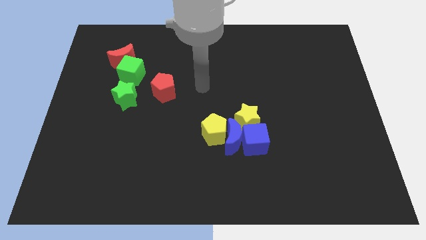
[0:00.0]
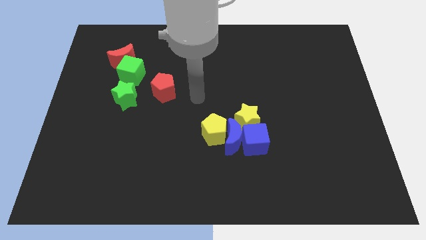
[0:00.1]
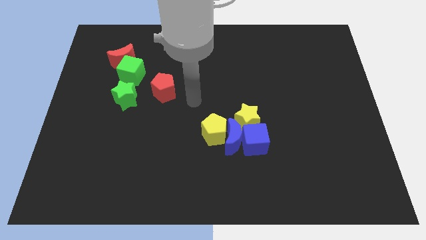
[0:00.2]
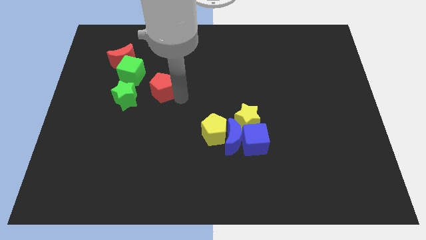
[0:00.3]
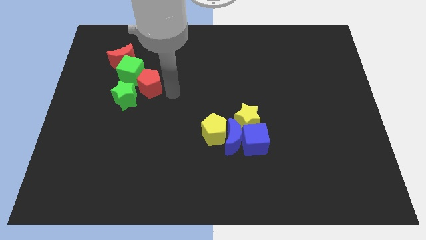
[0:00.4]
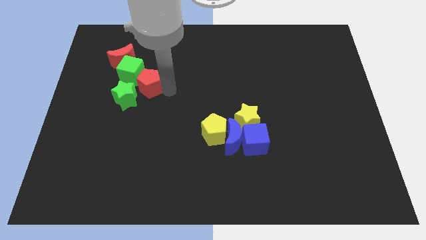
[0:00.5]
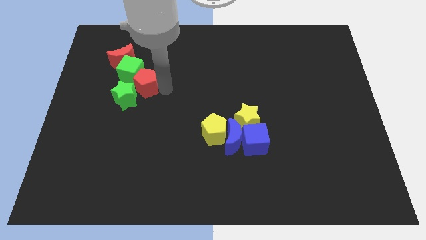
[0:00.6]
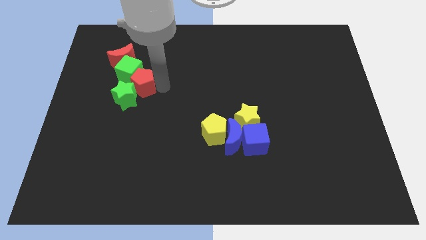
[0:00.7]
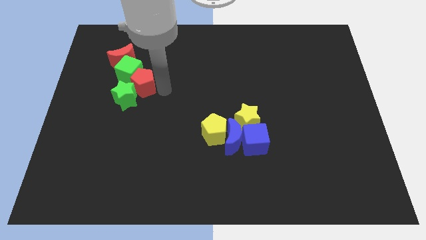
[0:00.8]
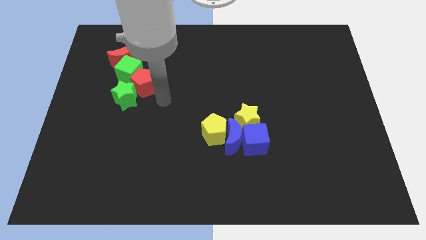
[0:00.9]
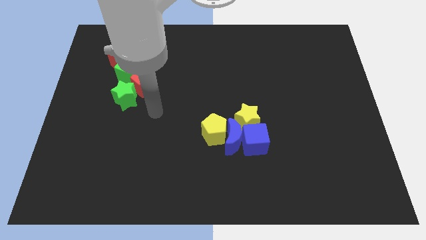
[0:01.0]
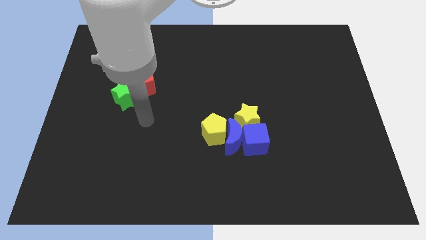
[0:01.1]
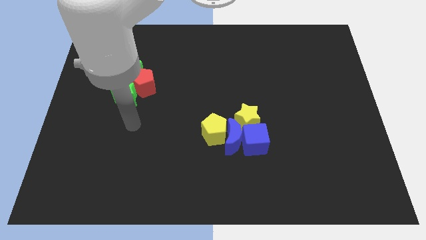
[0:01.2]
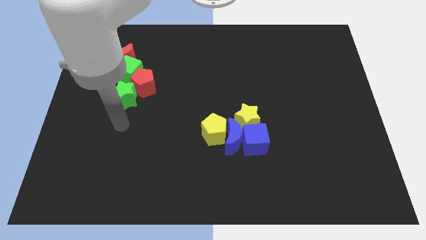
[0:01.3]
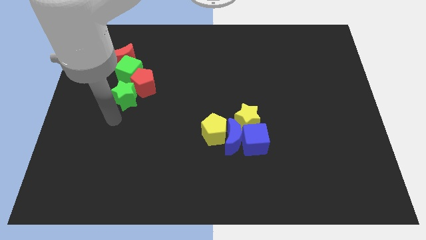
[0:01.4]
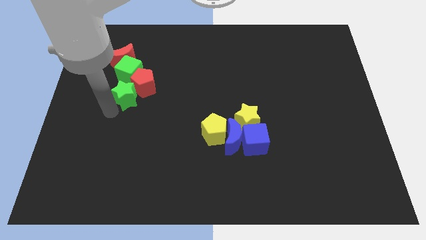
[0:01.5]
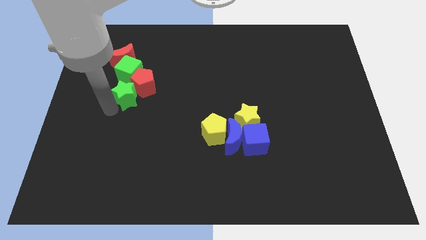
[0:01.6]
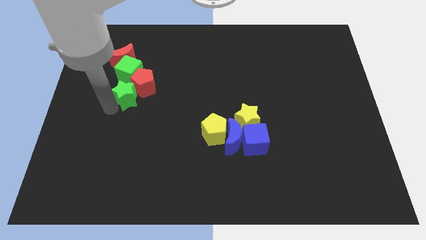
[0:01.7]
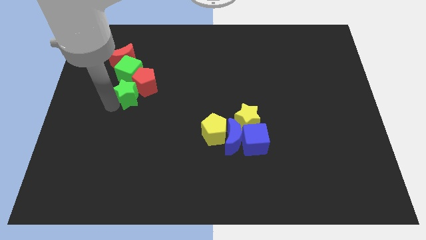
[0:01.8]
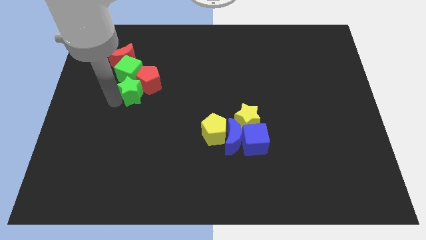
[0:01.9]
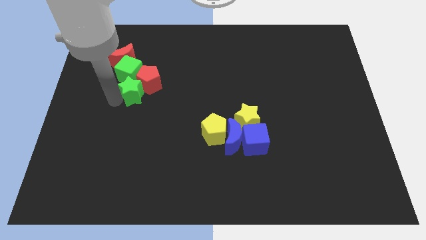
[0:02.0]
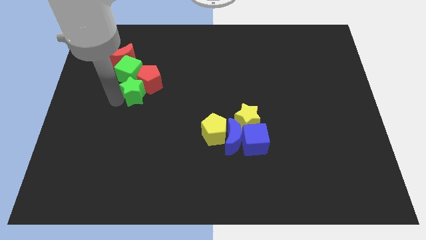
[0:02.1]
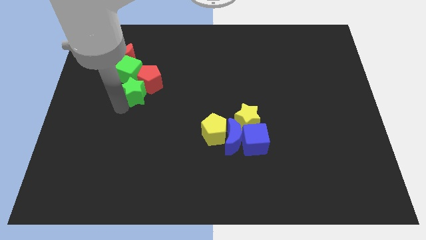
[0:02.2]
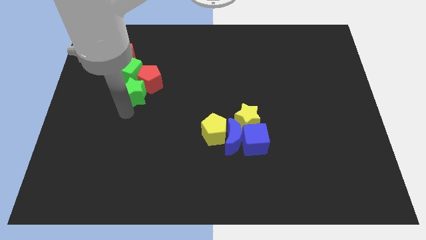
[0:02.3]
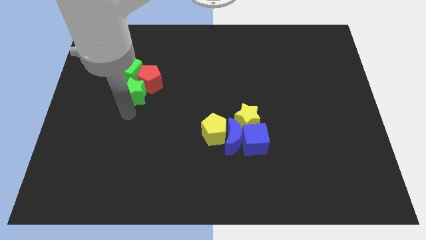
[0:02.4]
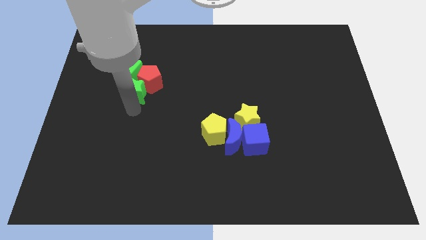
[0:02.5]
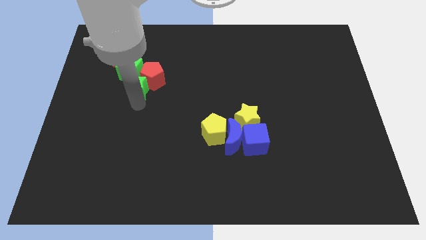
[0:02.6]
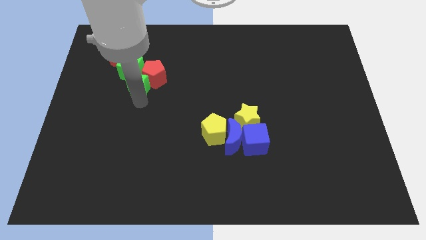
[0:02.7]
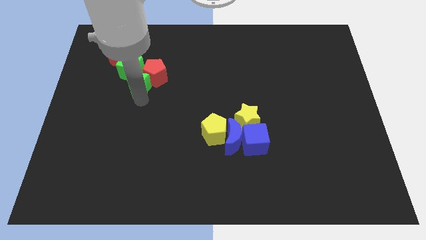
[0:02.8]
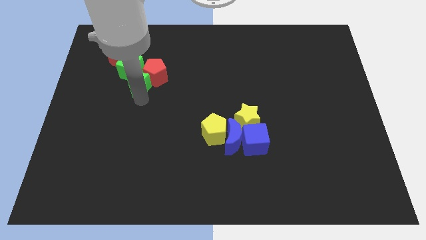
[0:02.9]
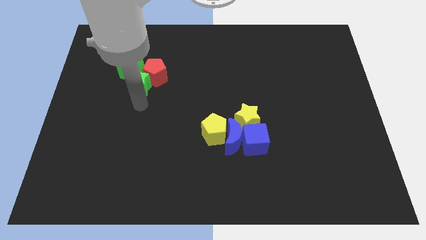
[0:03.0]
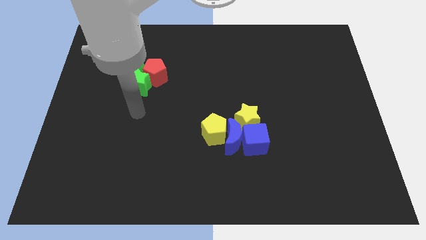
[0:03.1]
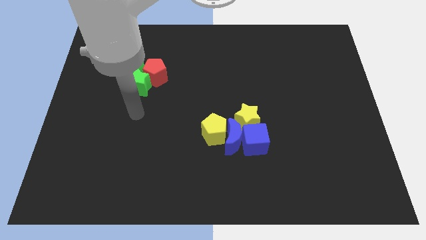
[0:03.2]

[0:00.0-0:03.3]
arrange a group of blocks with the red and green blocks

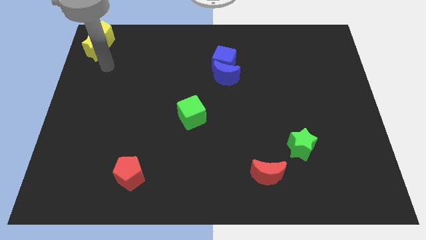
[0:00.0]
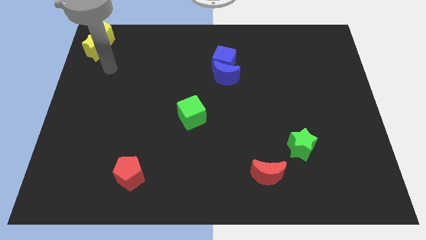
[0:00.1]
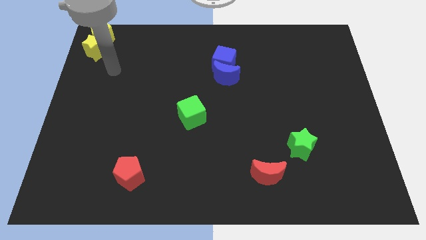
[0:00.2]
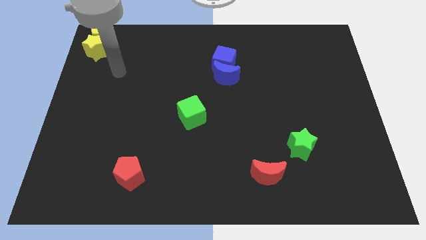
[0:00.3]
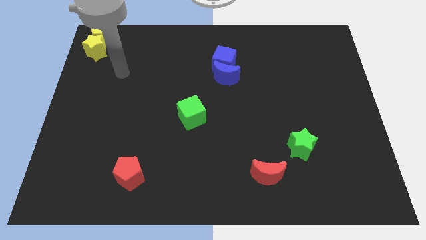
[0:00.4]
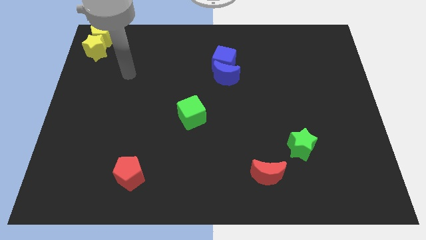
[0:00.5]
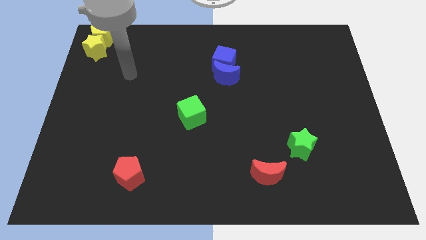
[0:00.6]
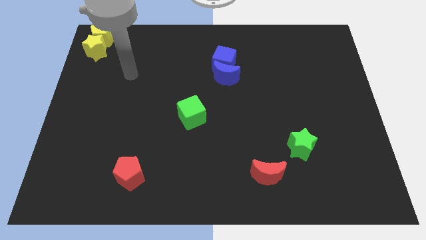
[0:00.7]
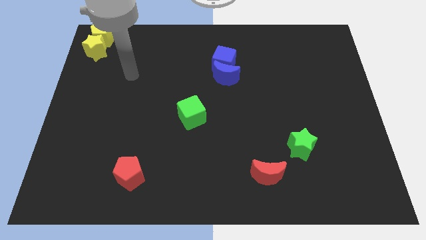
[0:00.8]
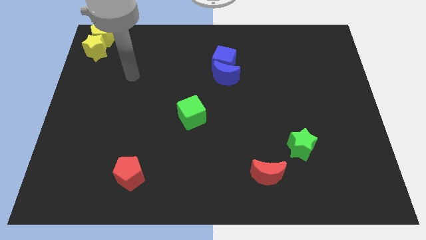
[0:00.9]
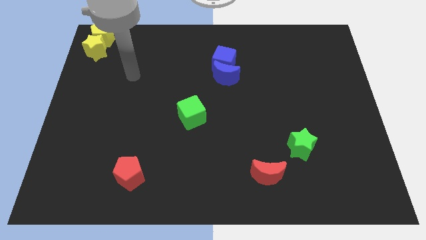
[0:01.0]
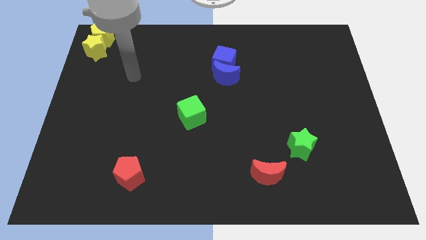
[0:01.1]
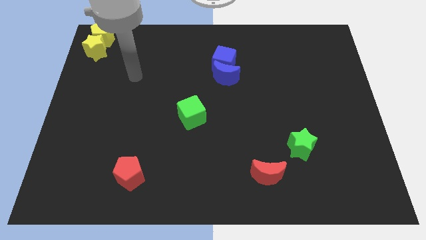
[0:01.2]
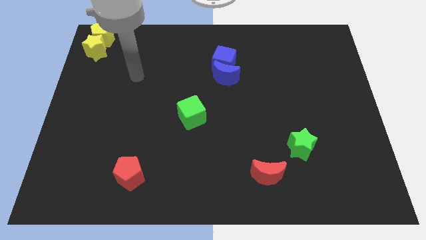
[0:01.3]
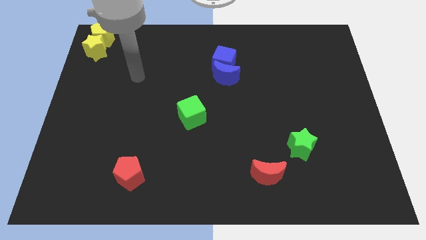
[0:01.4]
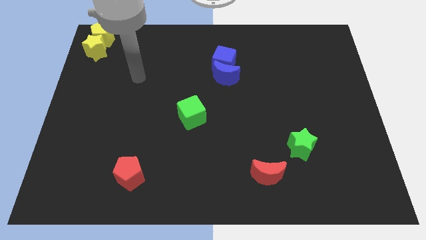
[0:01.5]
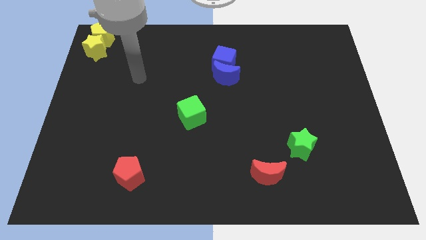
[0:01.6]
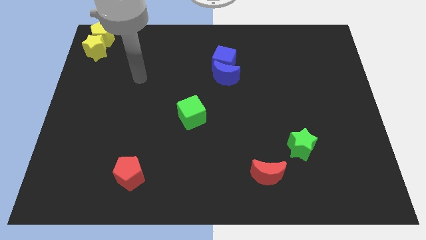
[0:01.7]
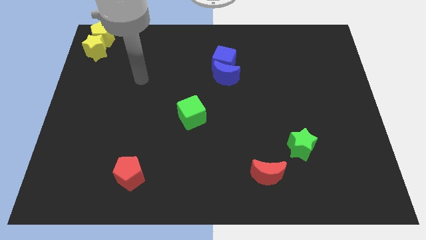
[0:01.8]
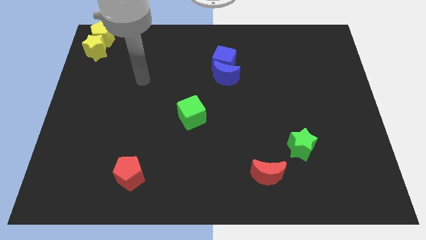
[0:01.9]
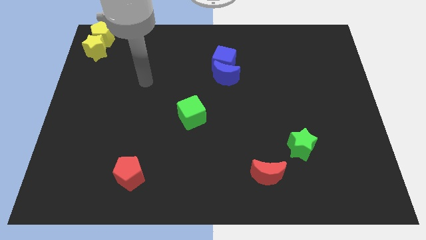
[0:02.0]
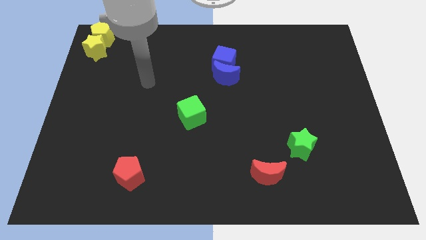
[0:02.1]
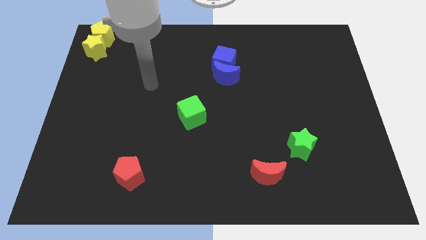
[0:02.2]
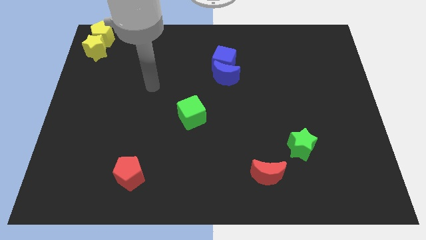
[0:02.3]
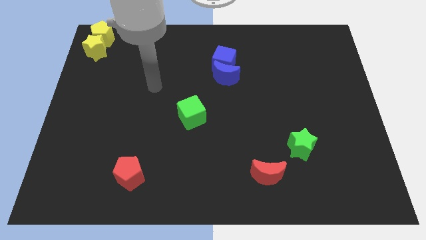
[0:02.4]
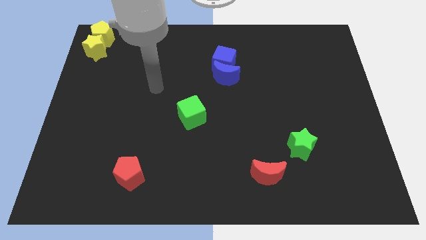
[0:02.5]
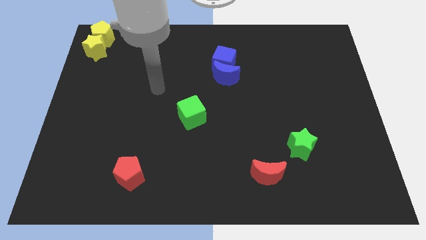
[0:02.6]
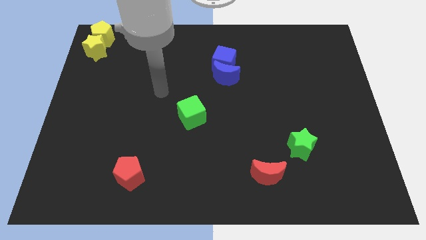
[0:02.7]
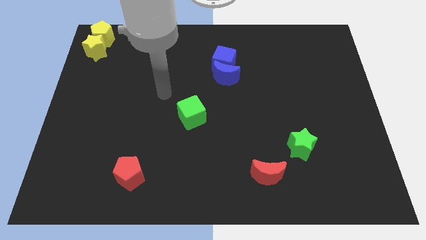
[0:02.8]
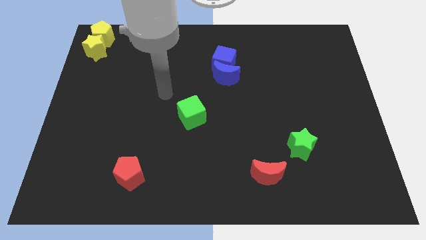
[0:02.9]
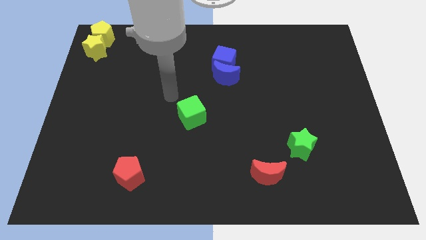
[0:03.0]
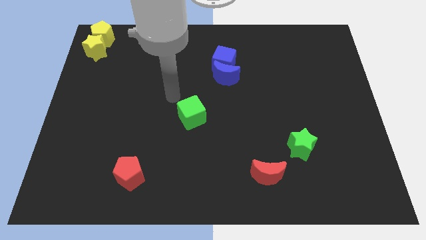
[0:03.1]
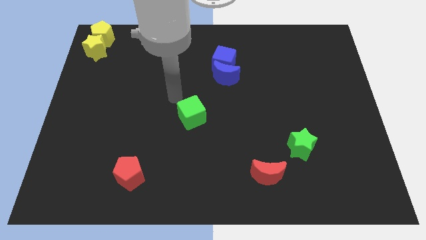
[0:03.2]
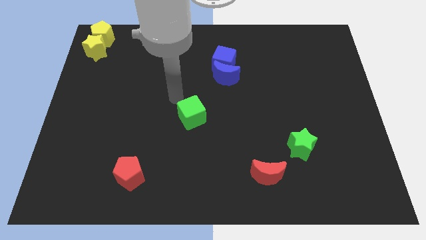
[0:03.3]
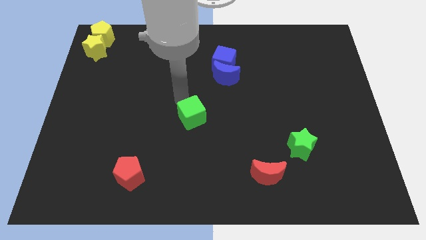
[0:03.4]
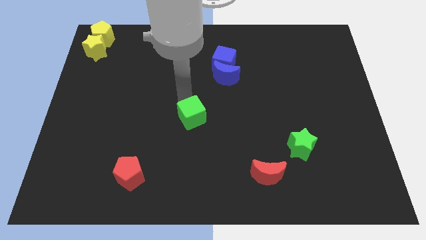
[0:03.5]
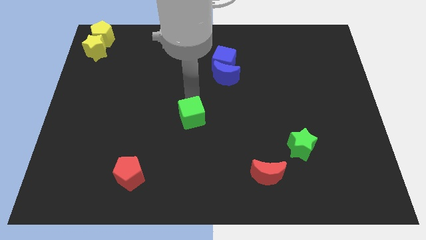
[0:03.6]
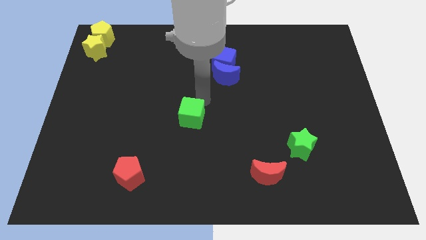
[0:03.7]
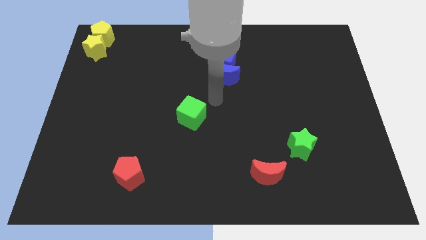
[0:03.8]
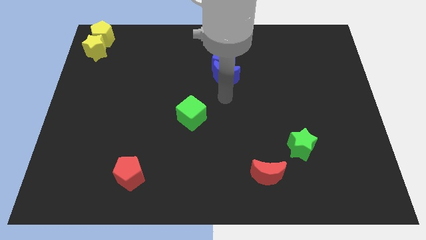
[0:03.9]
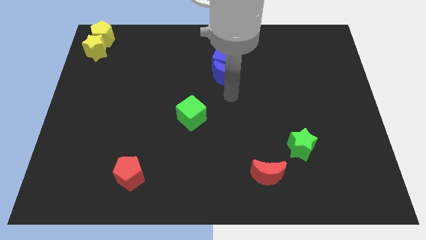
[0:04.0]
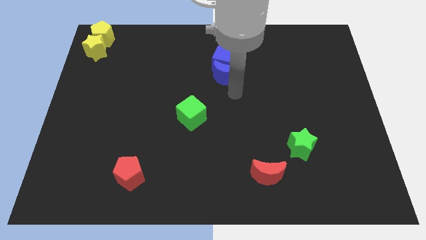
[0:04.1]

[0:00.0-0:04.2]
slightly move the green cube to the left of the board

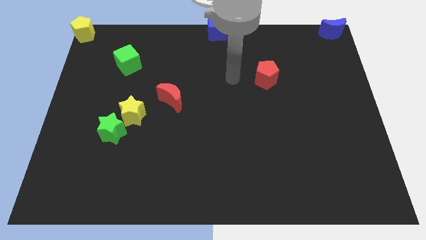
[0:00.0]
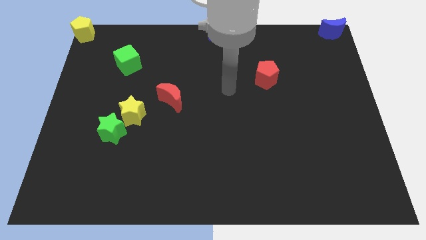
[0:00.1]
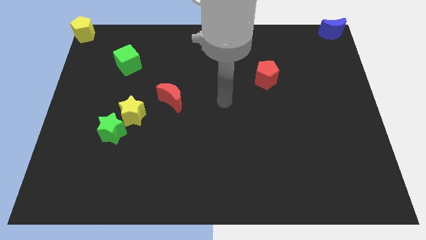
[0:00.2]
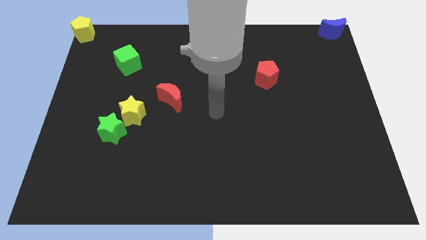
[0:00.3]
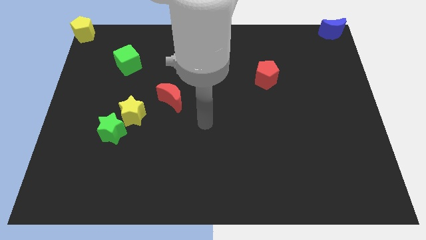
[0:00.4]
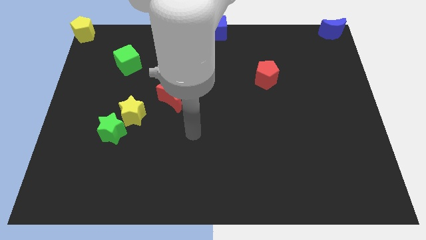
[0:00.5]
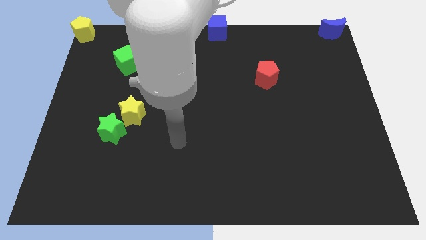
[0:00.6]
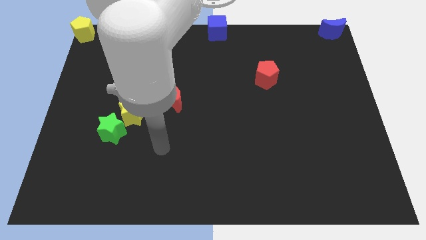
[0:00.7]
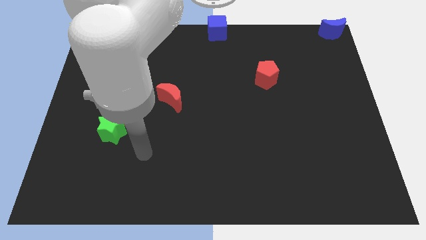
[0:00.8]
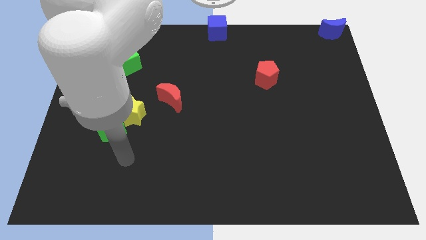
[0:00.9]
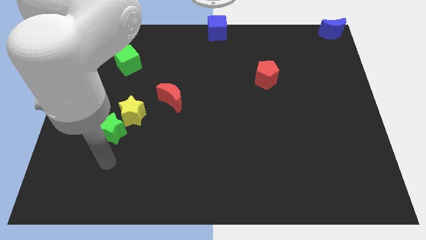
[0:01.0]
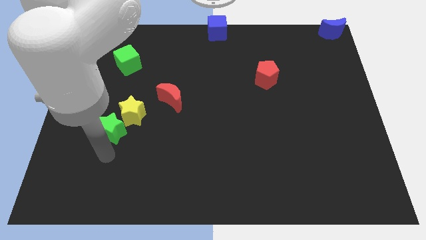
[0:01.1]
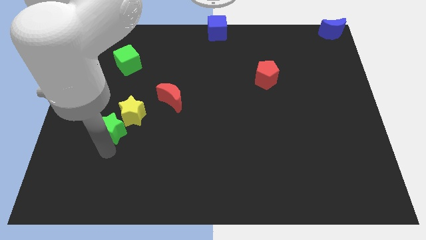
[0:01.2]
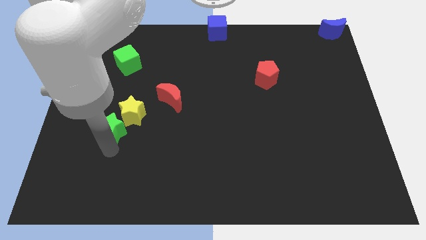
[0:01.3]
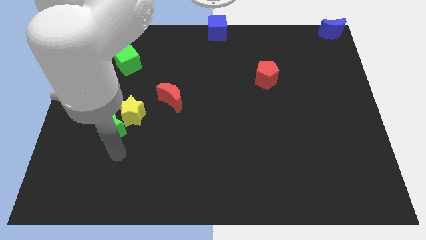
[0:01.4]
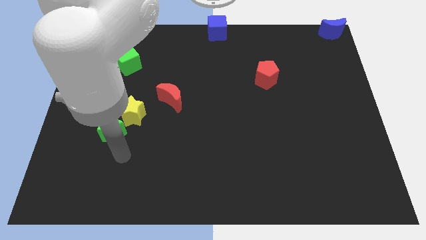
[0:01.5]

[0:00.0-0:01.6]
point your hand at the bottom side of the green star
